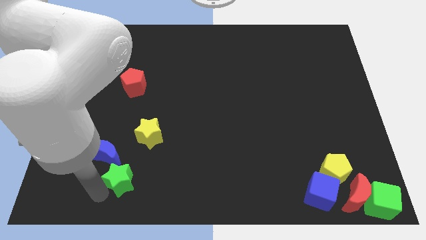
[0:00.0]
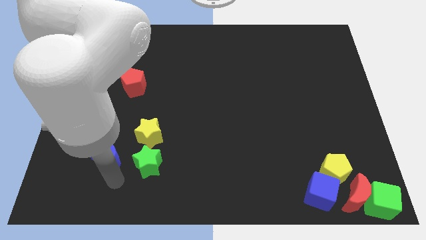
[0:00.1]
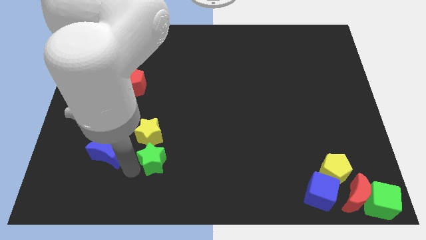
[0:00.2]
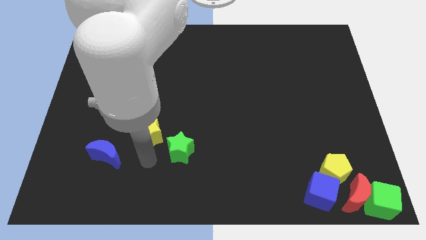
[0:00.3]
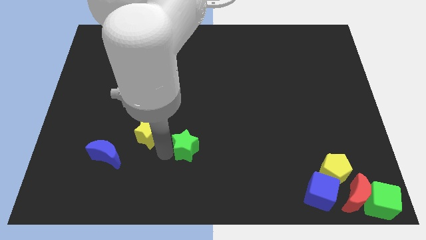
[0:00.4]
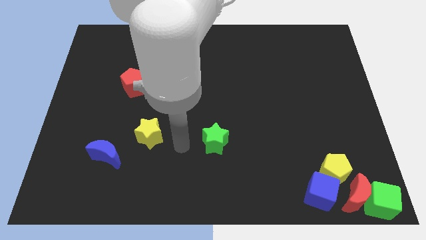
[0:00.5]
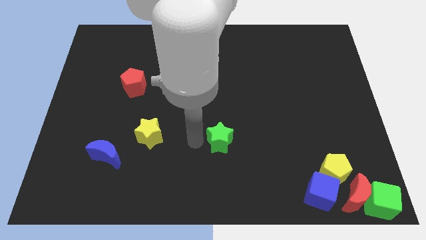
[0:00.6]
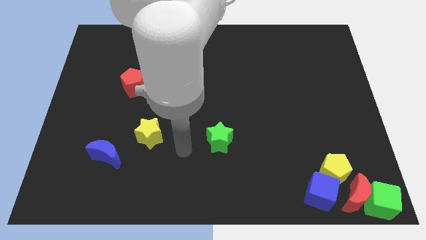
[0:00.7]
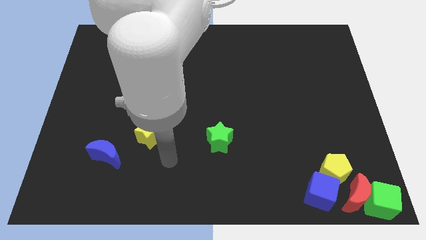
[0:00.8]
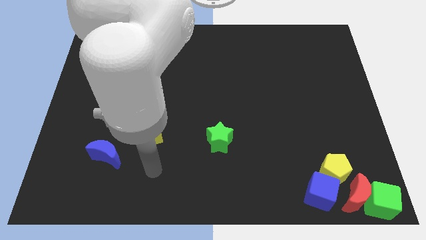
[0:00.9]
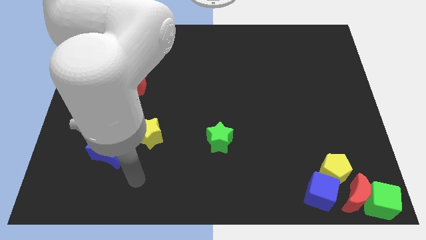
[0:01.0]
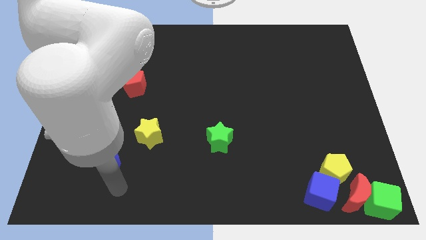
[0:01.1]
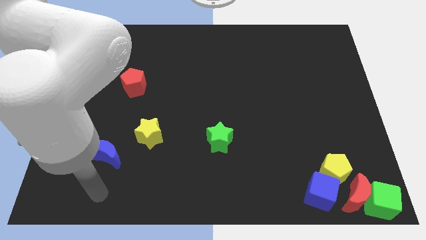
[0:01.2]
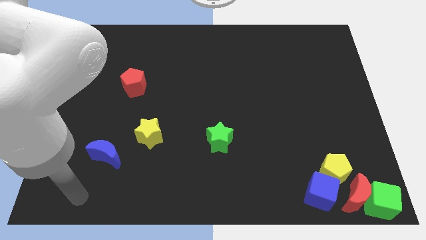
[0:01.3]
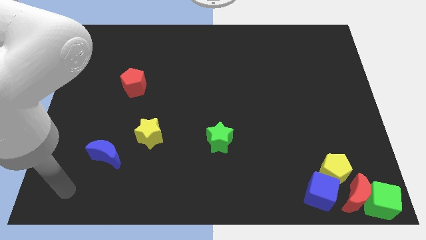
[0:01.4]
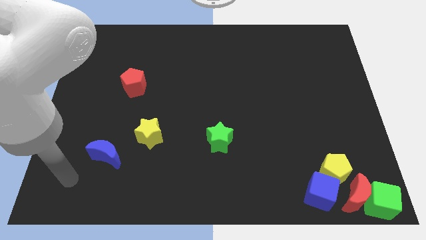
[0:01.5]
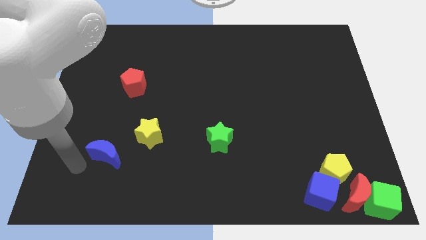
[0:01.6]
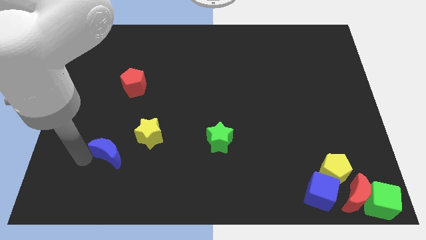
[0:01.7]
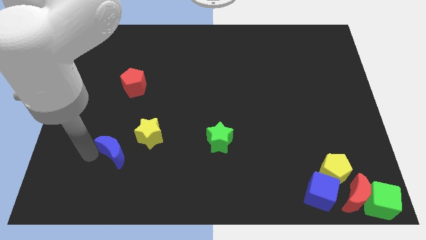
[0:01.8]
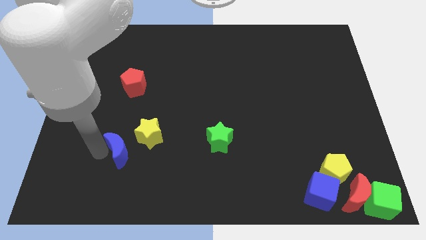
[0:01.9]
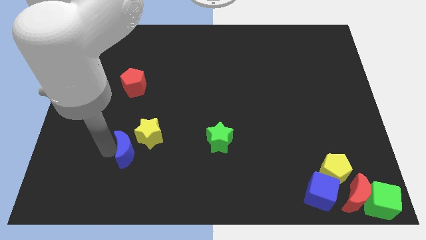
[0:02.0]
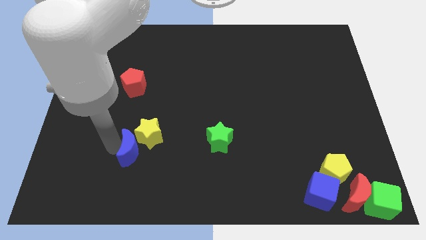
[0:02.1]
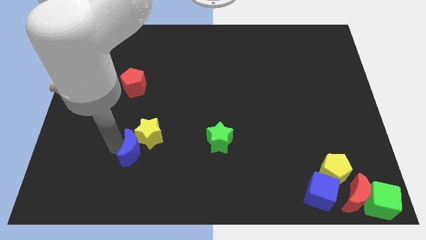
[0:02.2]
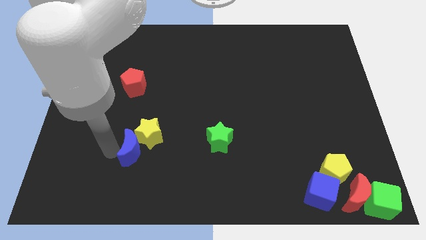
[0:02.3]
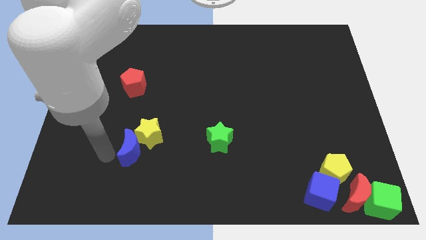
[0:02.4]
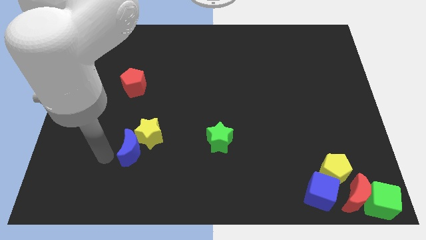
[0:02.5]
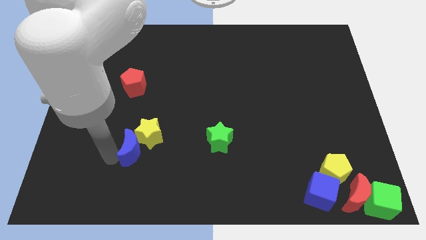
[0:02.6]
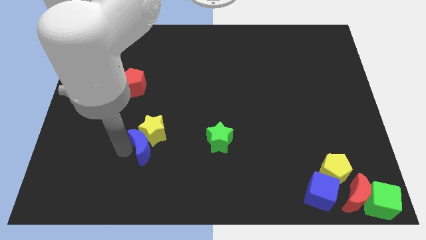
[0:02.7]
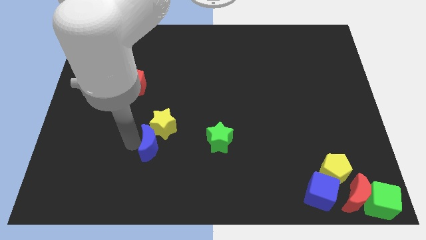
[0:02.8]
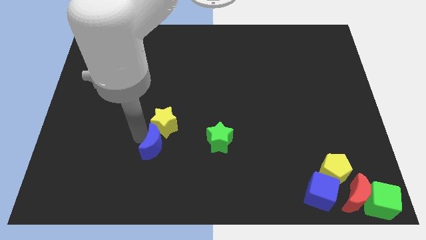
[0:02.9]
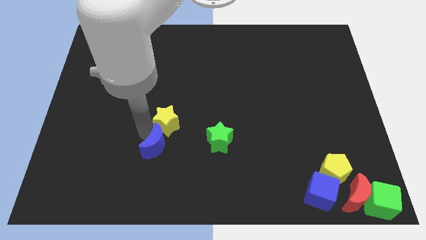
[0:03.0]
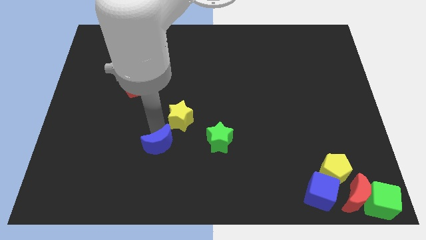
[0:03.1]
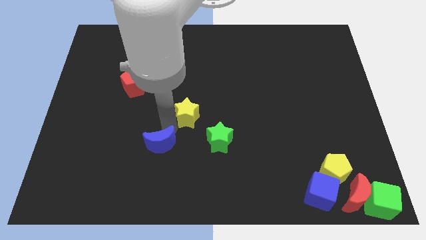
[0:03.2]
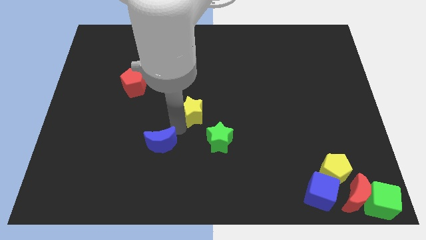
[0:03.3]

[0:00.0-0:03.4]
make a triangle with the green star blue crescent and yellow star

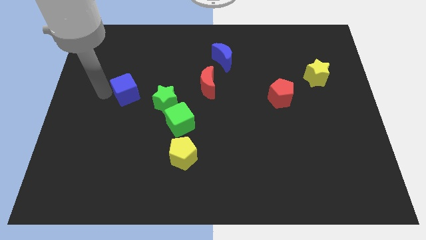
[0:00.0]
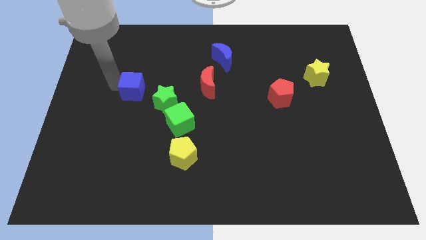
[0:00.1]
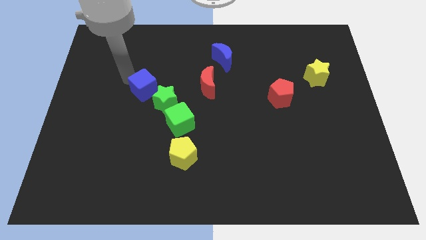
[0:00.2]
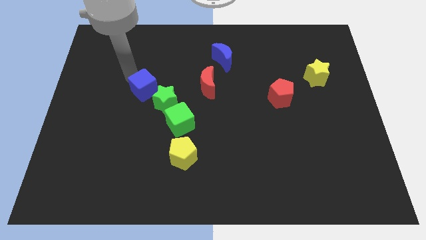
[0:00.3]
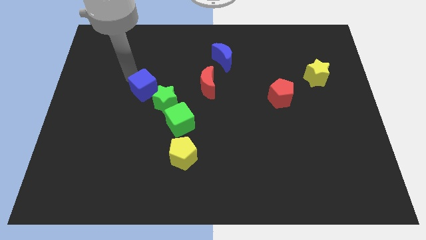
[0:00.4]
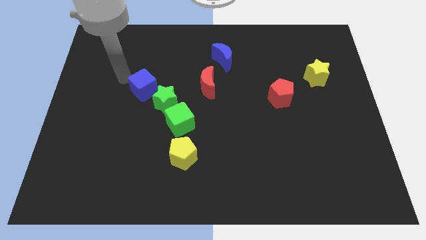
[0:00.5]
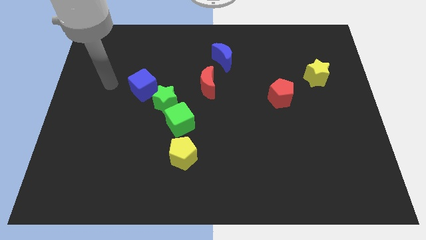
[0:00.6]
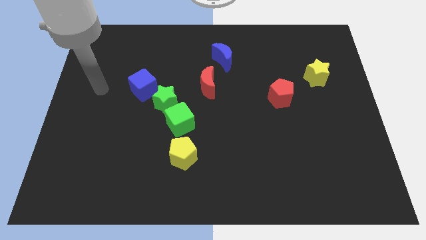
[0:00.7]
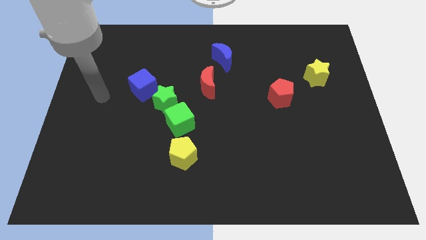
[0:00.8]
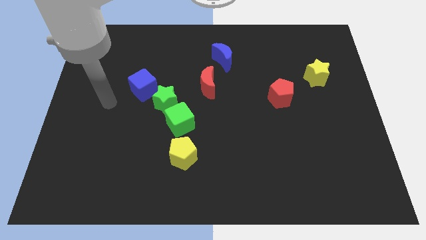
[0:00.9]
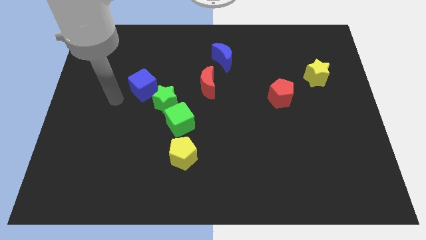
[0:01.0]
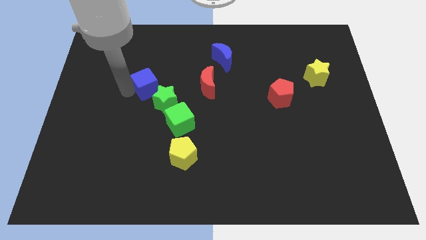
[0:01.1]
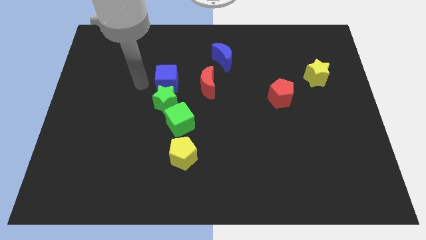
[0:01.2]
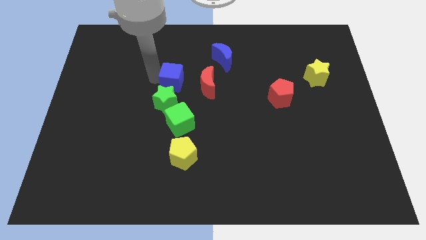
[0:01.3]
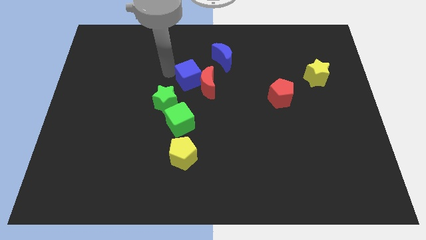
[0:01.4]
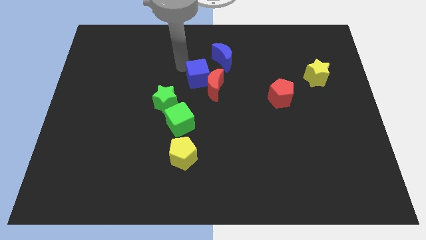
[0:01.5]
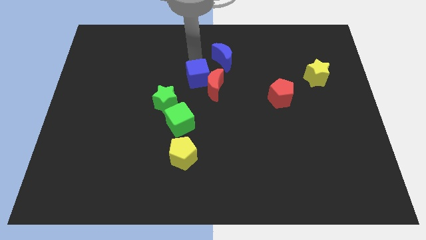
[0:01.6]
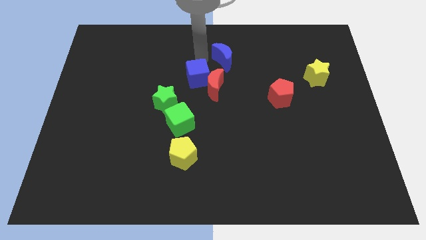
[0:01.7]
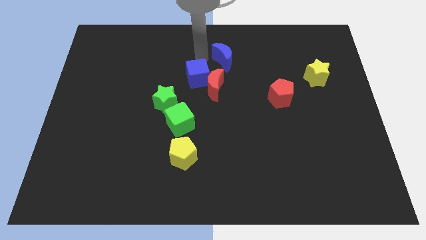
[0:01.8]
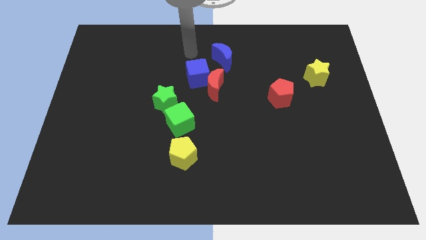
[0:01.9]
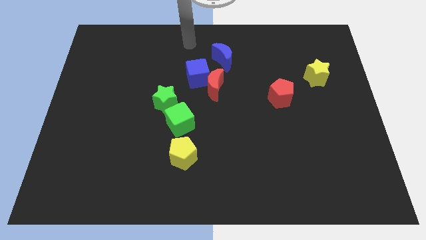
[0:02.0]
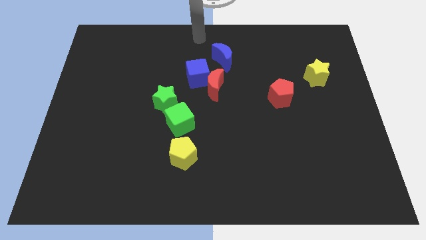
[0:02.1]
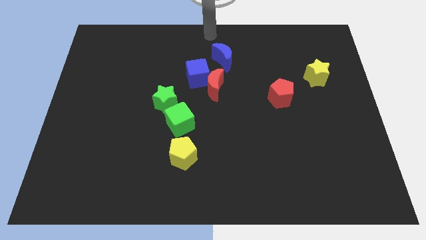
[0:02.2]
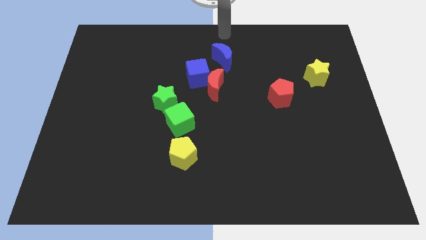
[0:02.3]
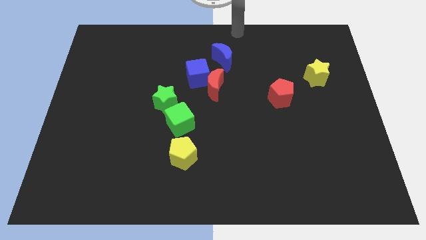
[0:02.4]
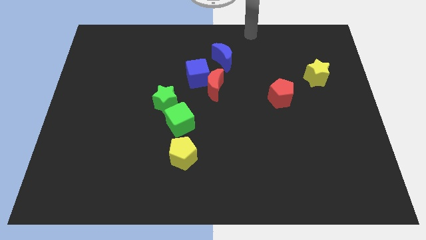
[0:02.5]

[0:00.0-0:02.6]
place blue block into the red crescent

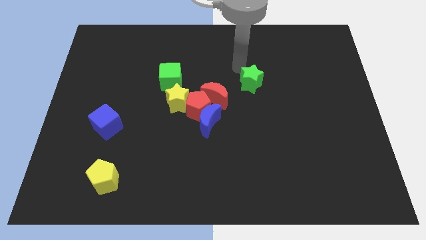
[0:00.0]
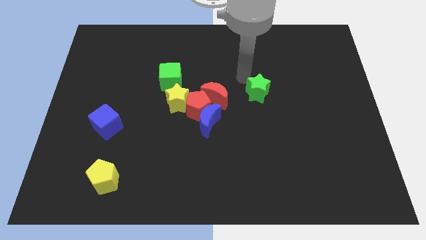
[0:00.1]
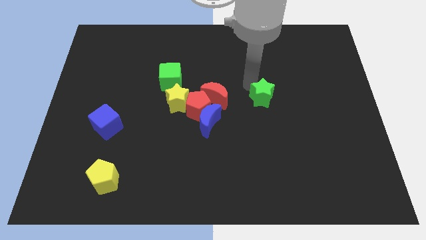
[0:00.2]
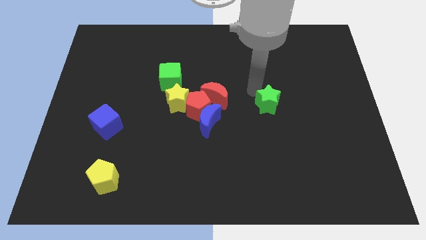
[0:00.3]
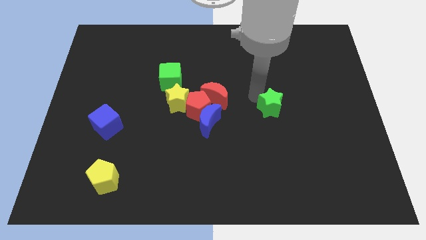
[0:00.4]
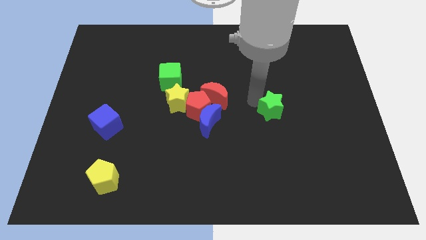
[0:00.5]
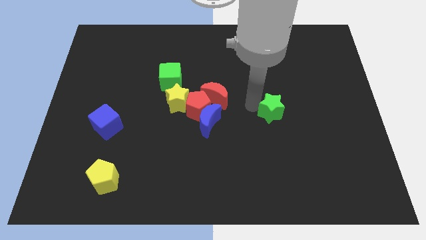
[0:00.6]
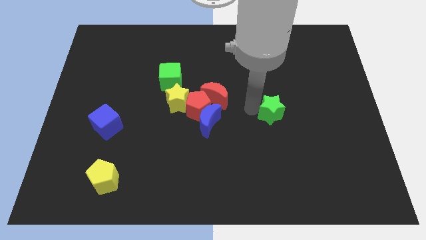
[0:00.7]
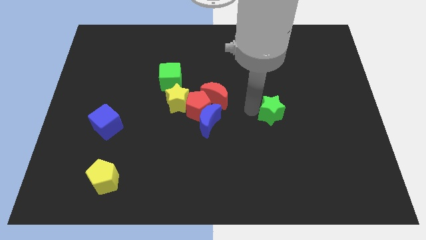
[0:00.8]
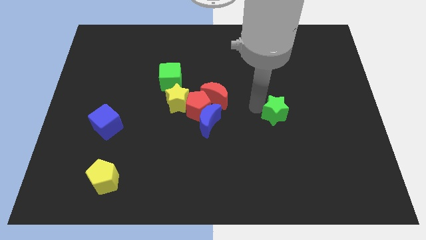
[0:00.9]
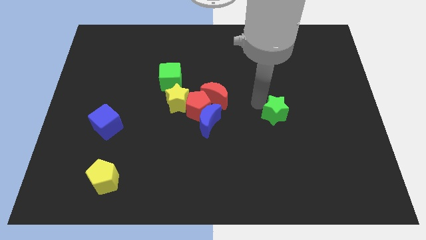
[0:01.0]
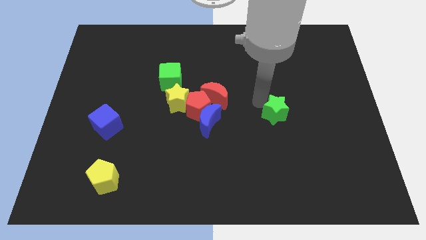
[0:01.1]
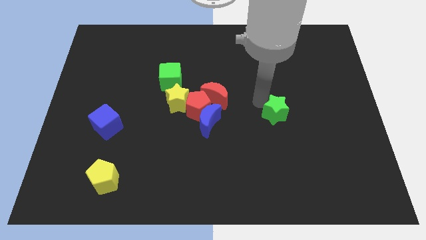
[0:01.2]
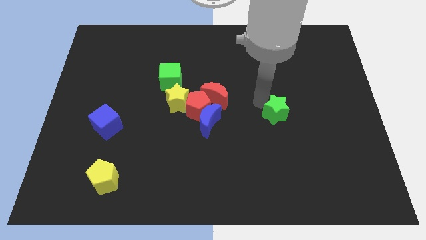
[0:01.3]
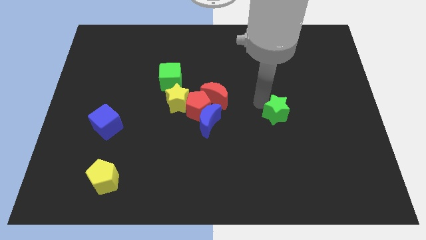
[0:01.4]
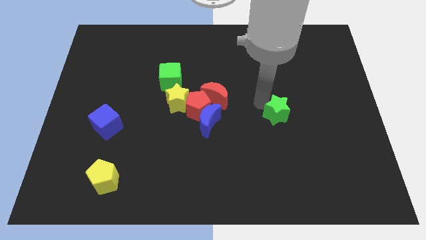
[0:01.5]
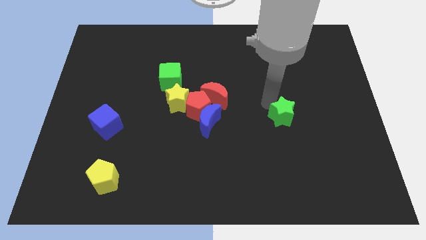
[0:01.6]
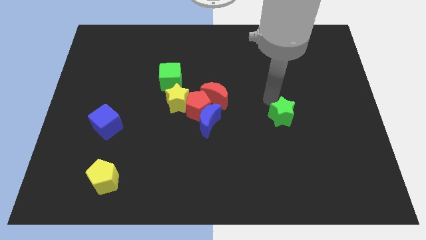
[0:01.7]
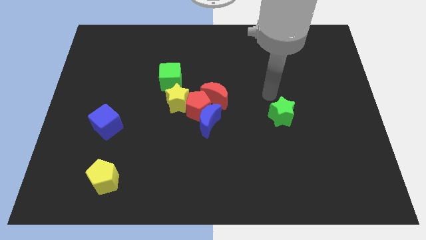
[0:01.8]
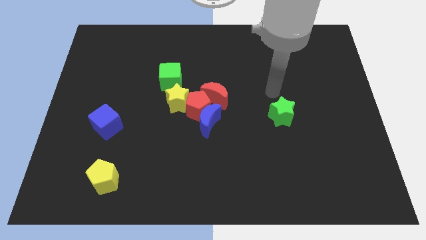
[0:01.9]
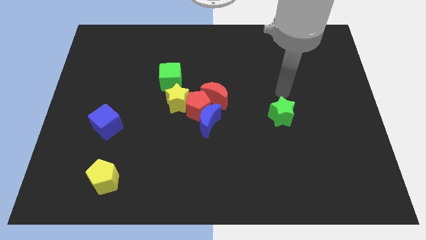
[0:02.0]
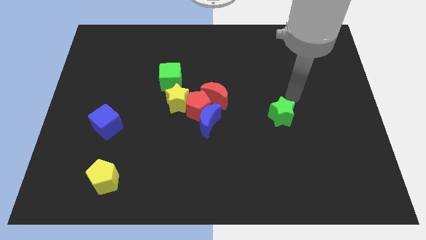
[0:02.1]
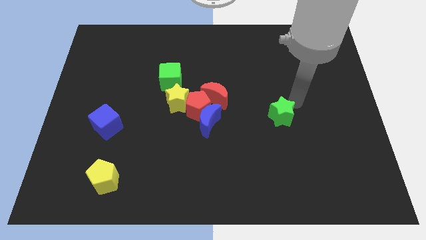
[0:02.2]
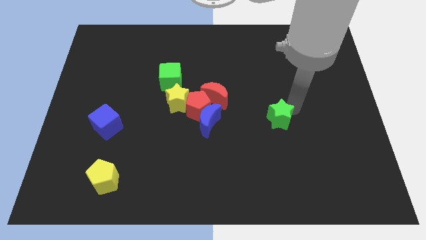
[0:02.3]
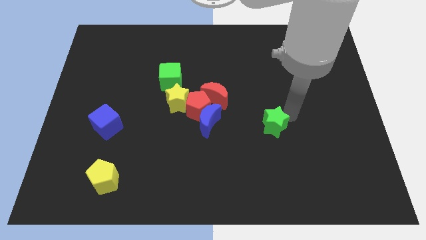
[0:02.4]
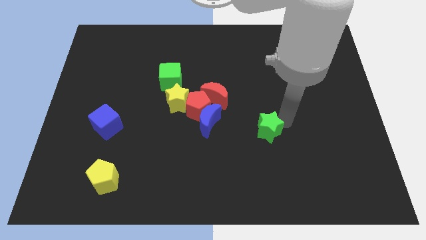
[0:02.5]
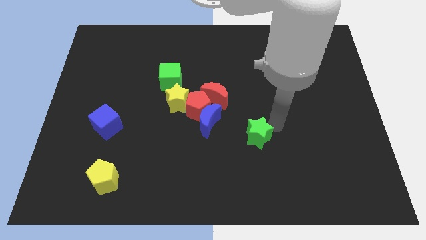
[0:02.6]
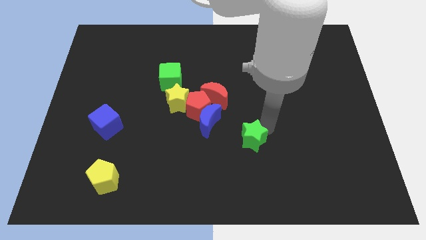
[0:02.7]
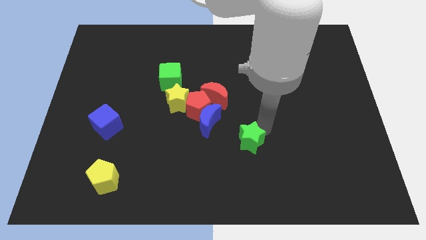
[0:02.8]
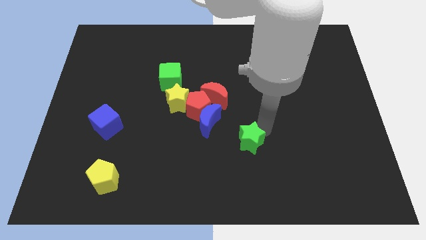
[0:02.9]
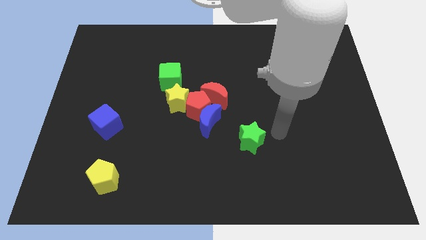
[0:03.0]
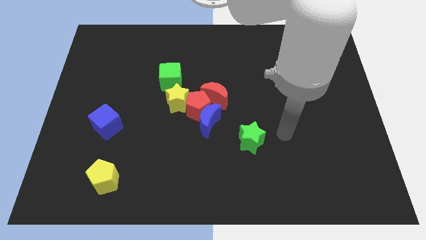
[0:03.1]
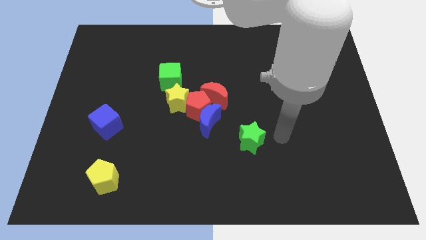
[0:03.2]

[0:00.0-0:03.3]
drag the green star diagonally bottom right to the blue moon
